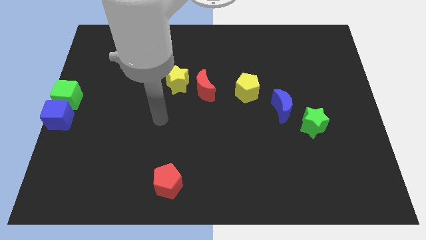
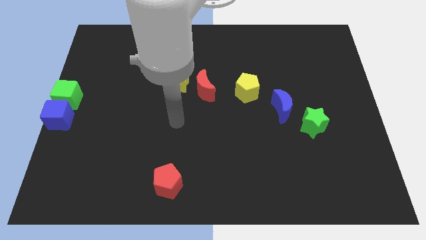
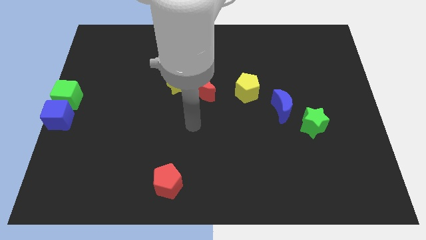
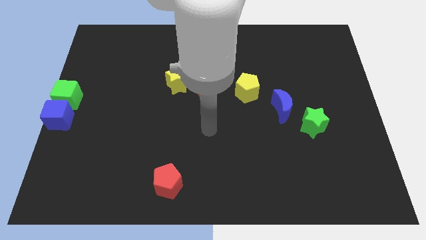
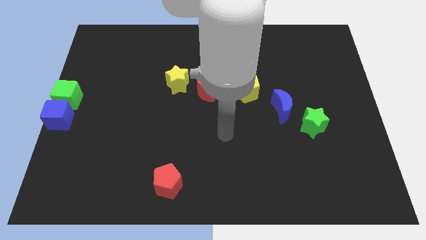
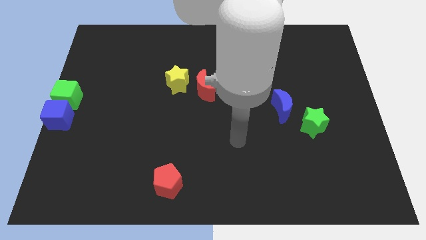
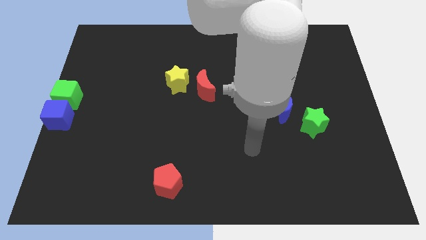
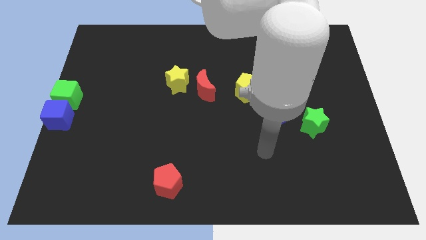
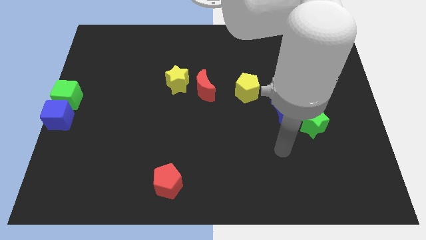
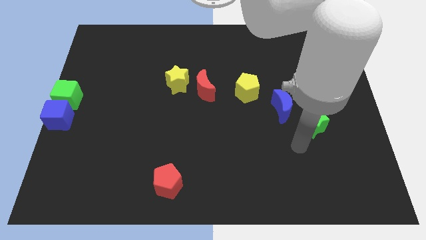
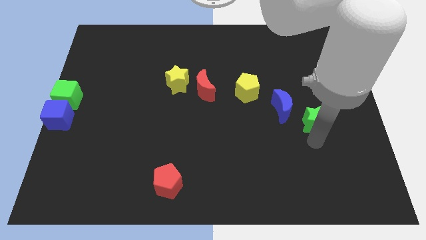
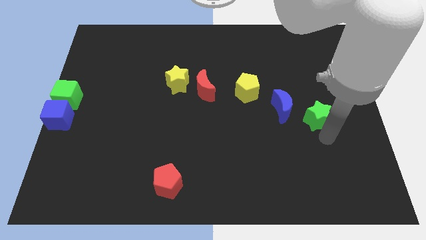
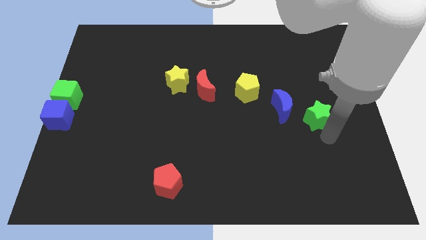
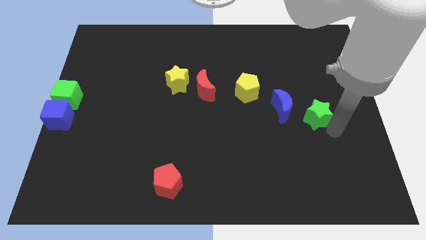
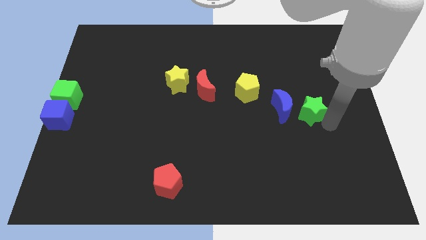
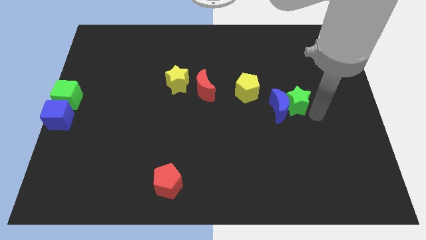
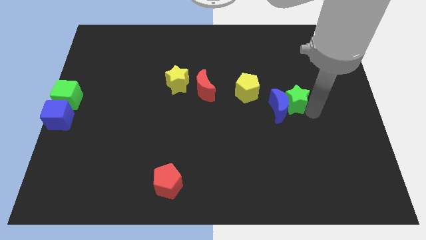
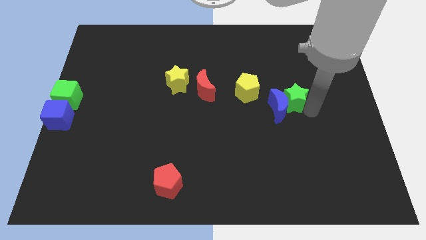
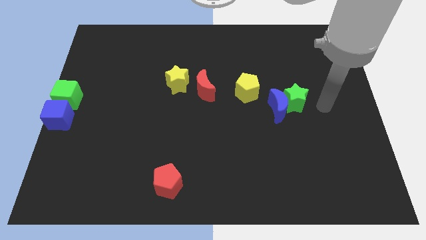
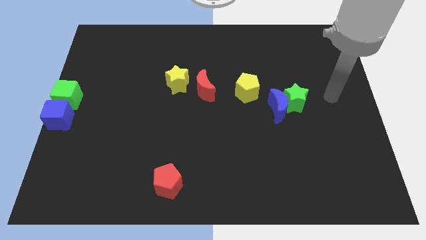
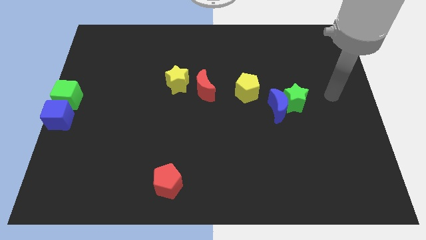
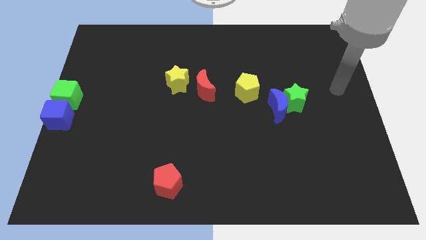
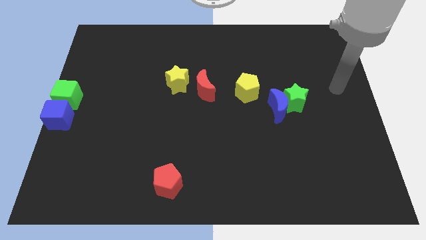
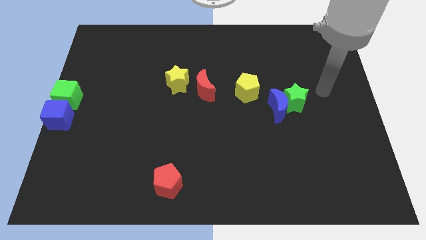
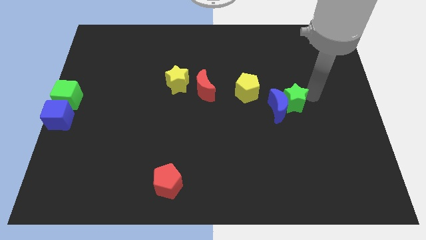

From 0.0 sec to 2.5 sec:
push the green star to the right of blue moon

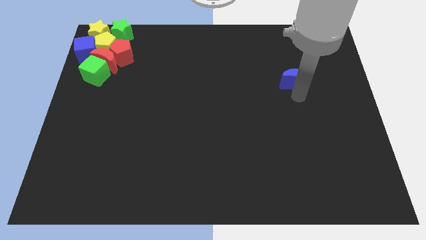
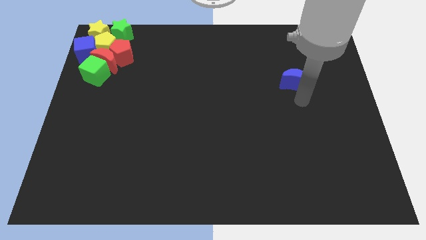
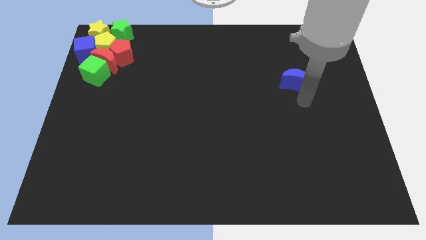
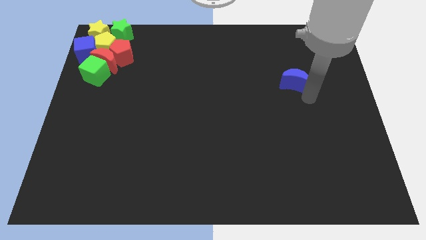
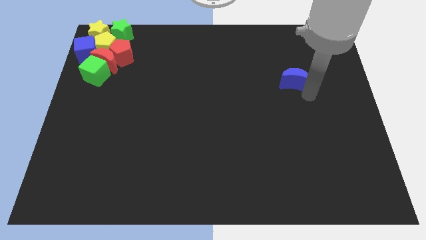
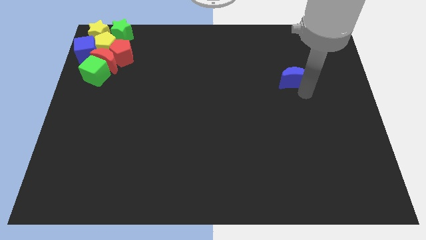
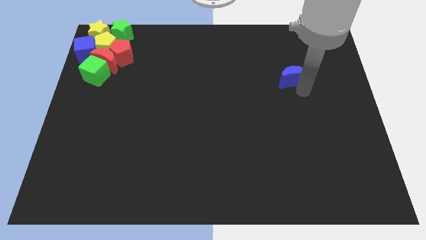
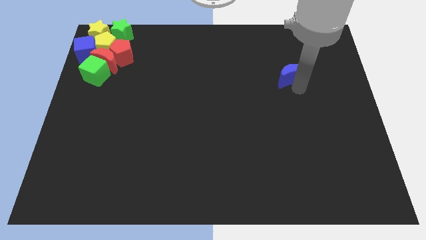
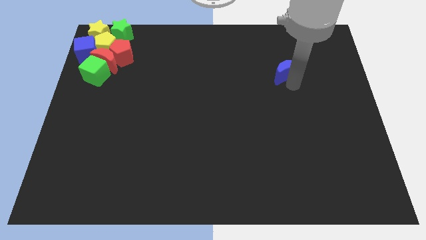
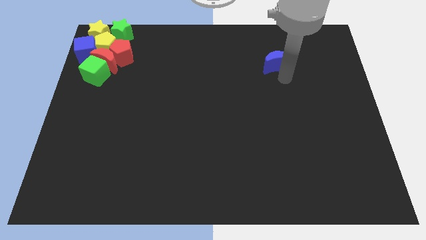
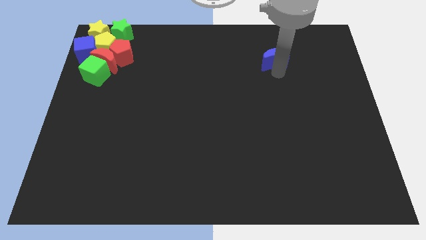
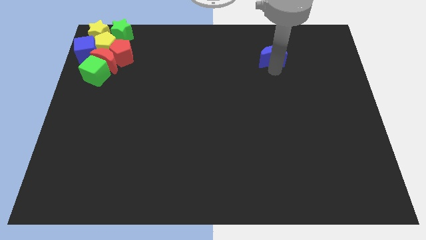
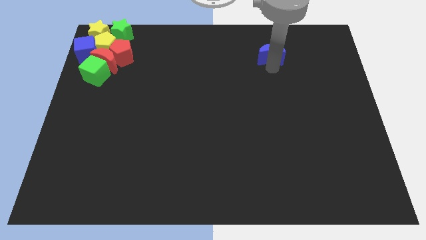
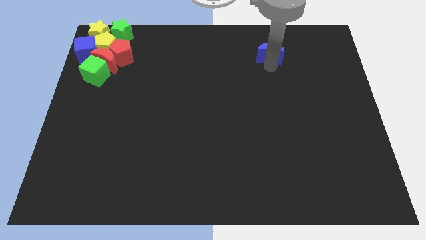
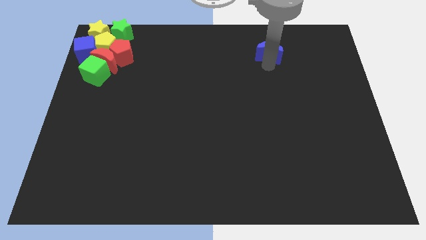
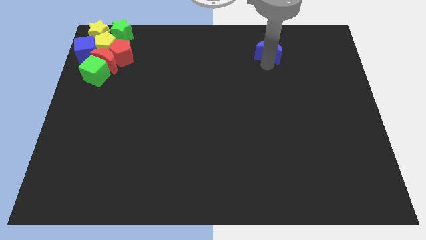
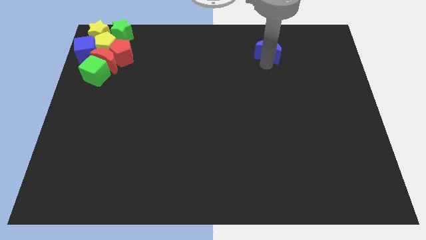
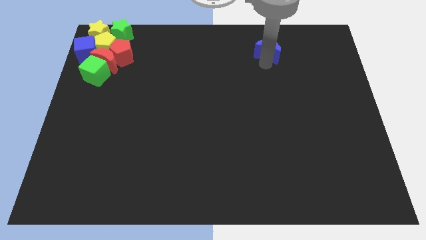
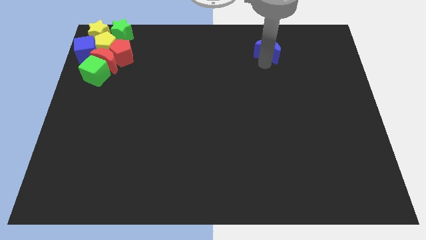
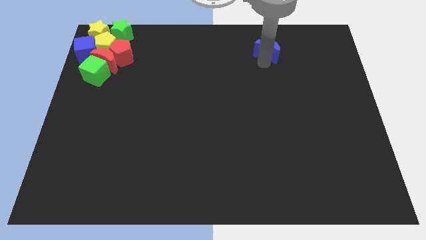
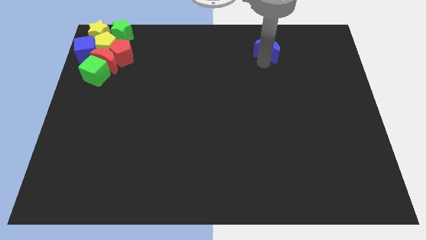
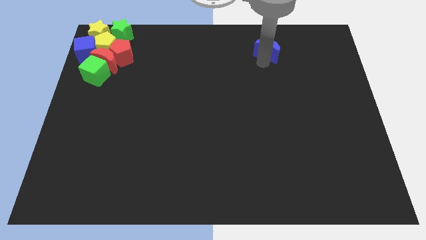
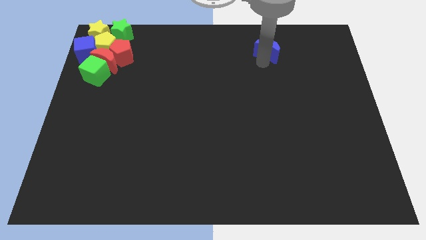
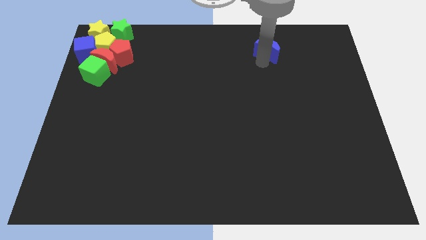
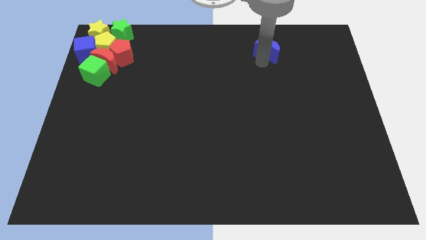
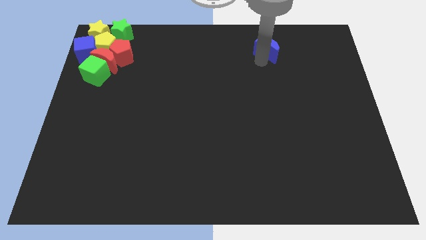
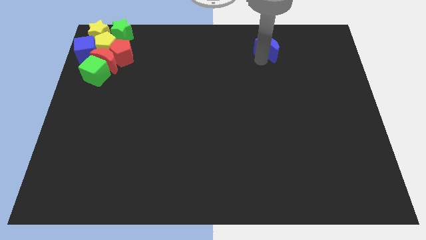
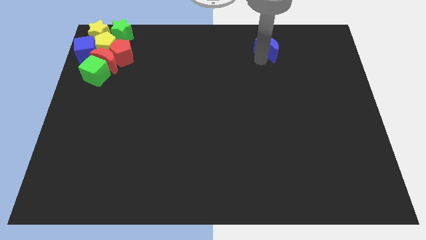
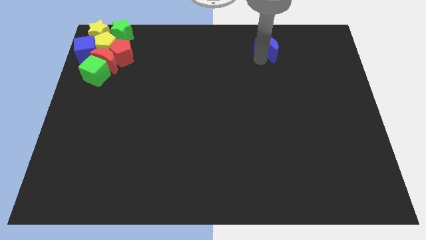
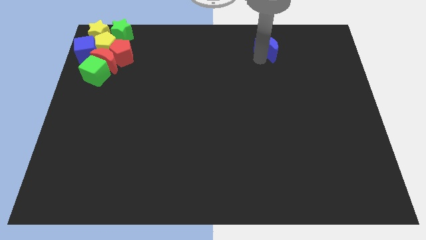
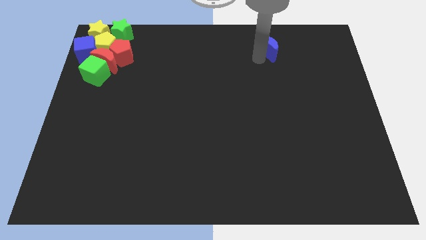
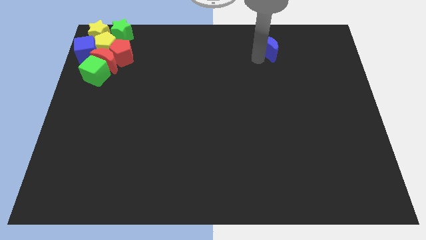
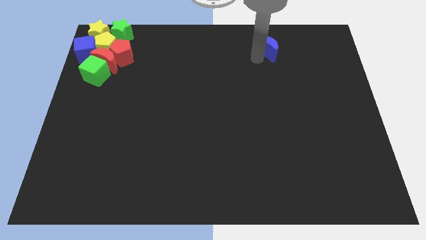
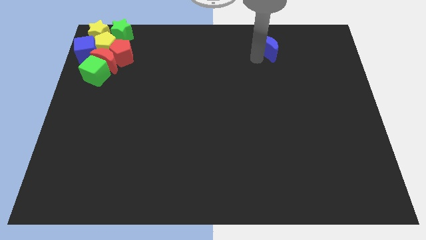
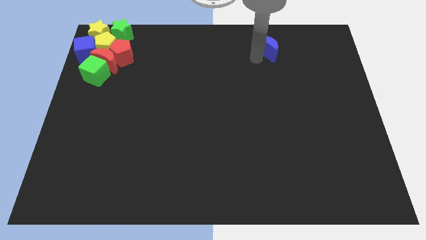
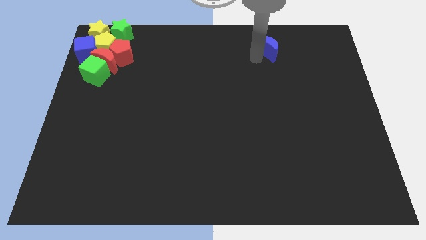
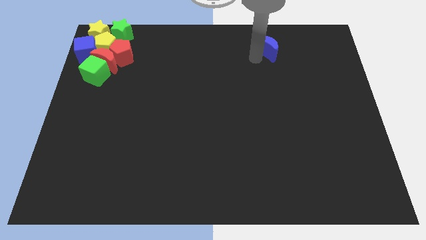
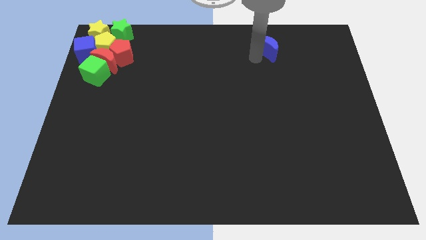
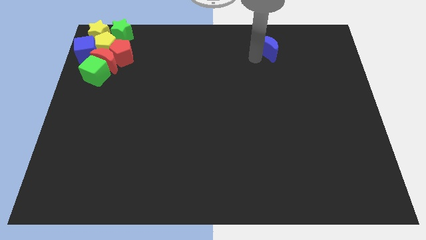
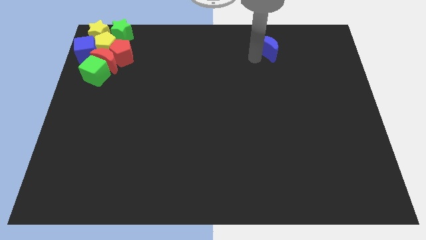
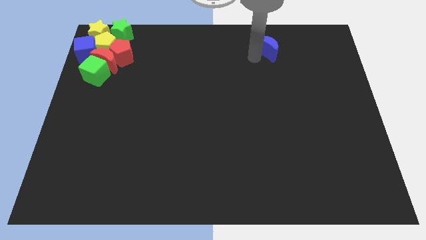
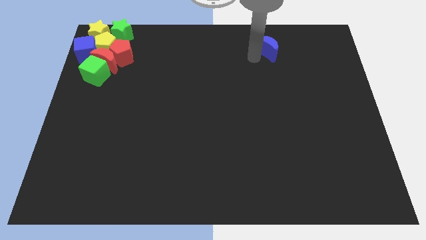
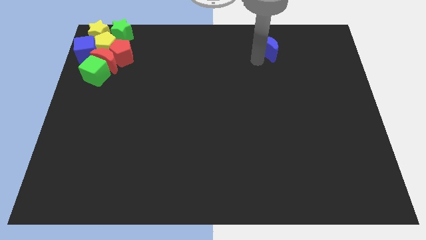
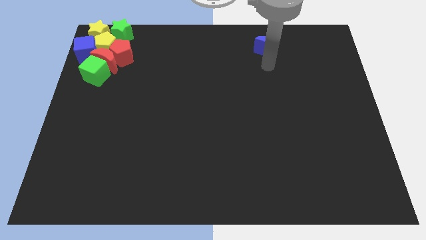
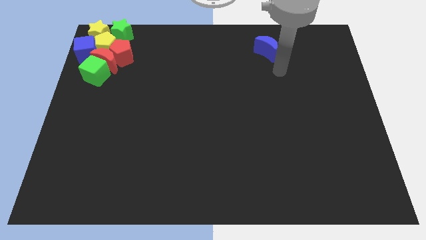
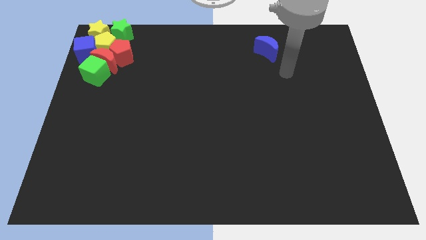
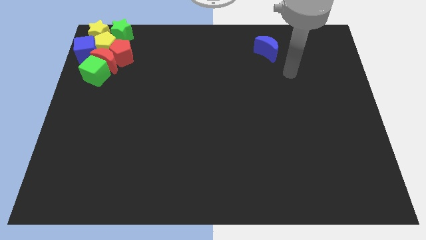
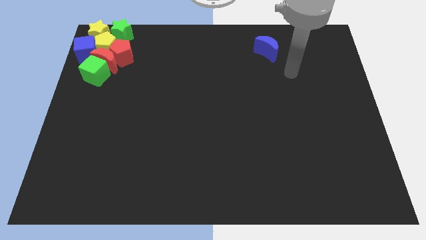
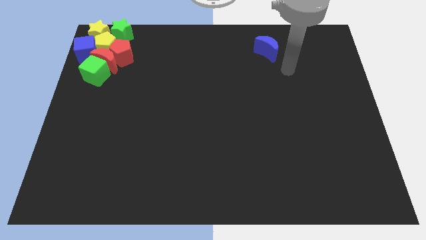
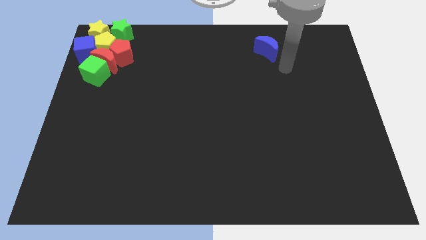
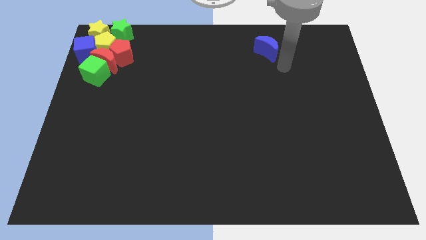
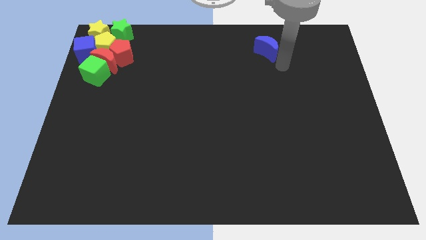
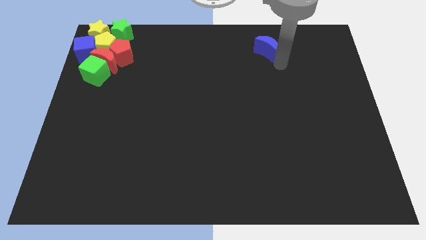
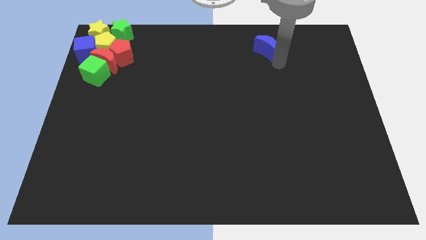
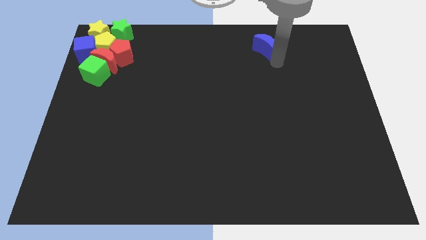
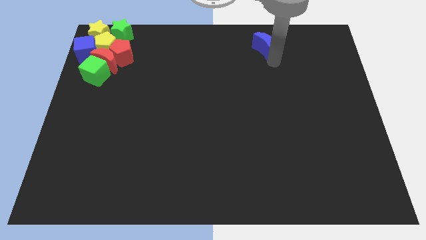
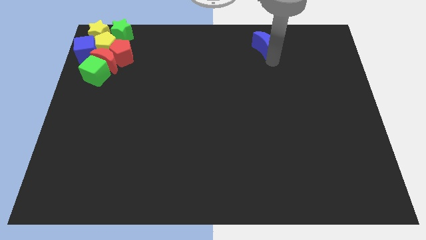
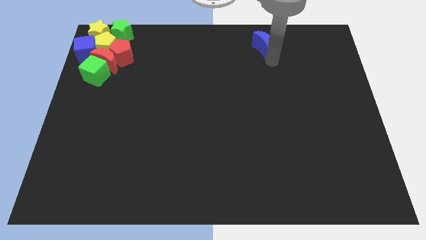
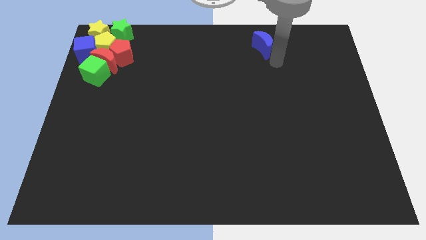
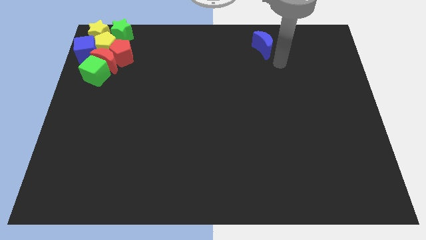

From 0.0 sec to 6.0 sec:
push the blue moon to the top center

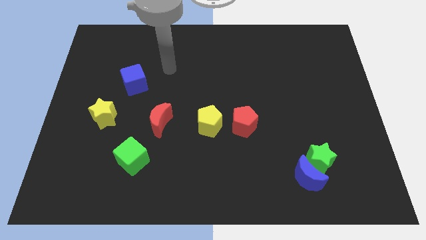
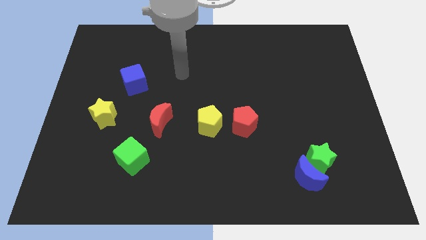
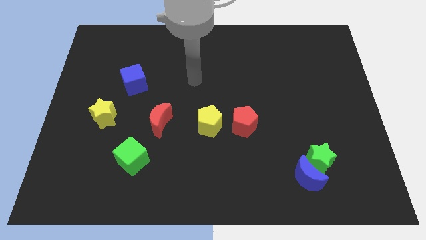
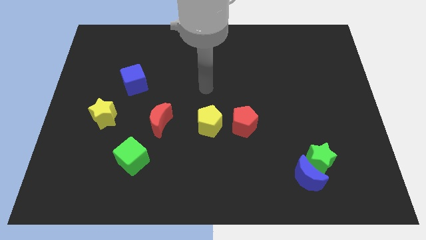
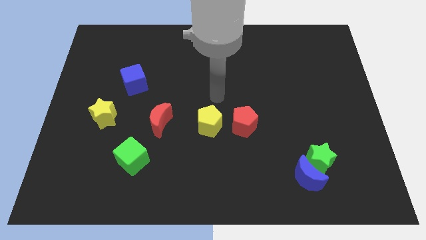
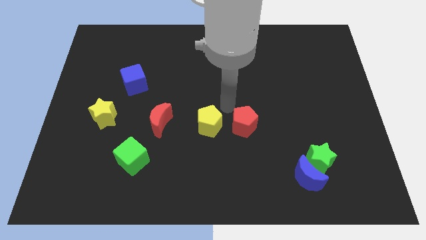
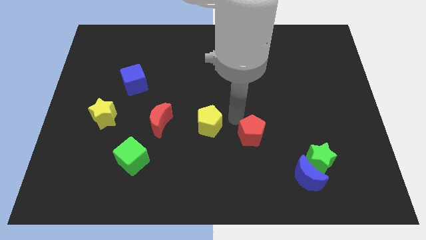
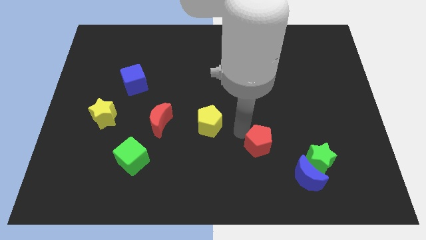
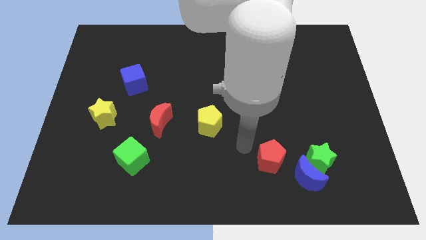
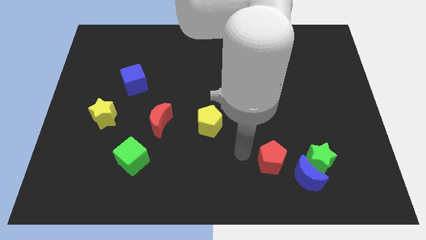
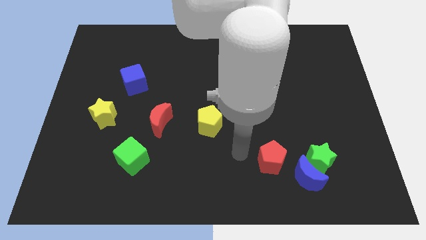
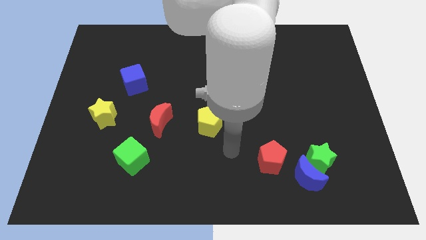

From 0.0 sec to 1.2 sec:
push the red pentagon diagonally bottom right to the yellow pentagon
